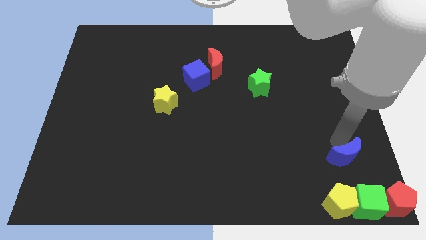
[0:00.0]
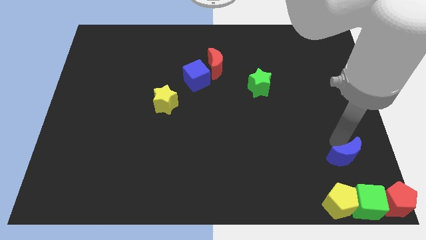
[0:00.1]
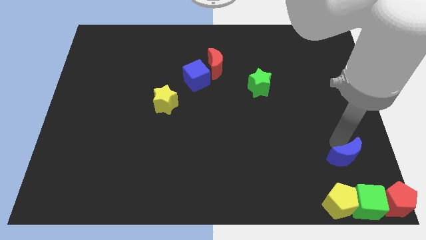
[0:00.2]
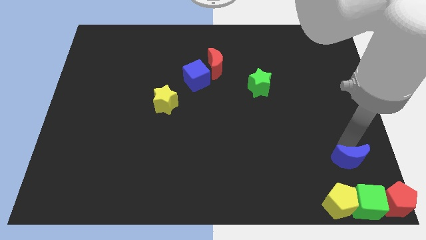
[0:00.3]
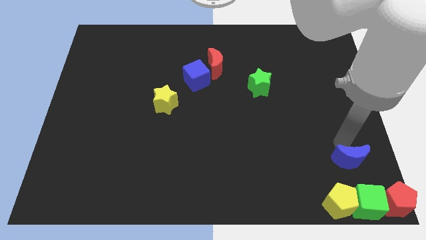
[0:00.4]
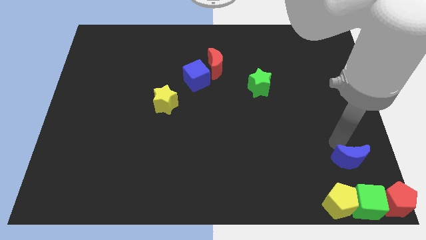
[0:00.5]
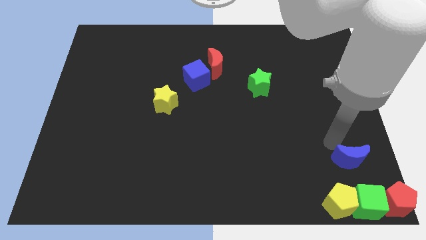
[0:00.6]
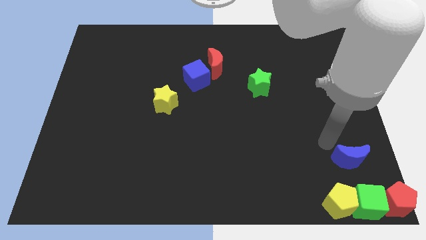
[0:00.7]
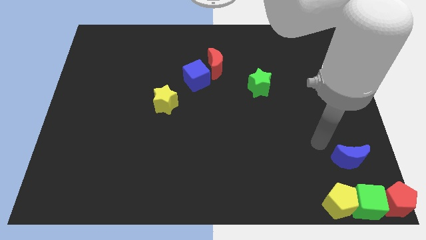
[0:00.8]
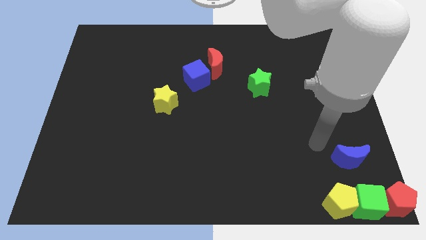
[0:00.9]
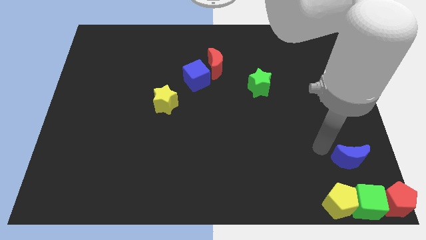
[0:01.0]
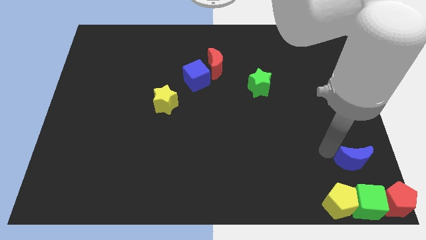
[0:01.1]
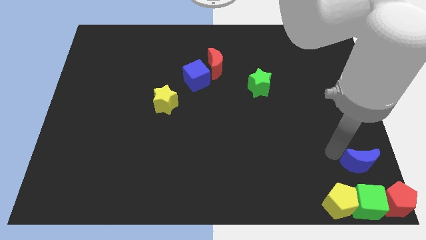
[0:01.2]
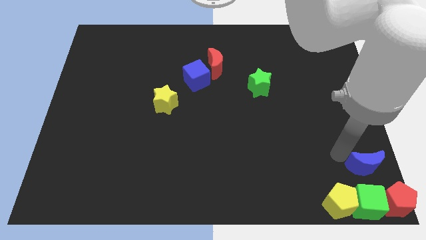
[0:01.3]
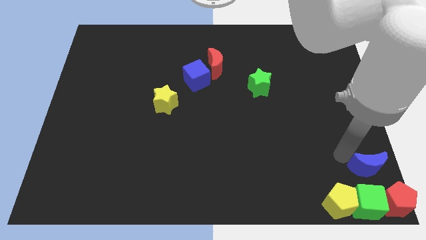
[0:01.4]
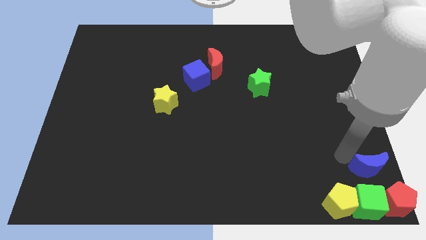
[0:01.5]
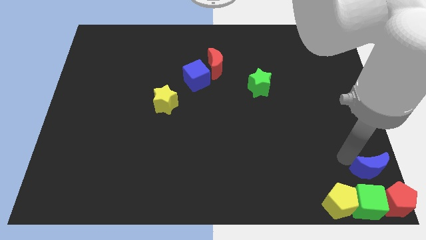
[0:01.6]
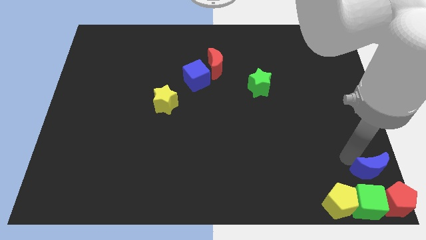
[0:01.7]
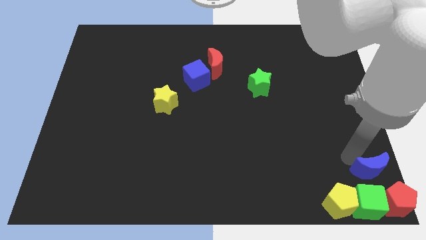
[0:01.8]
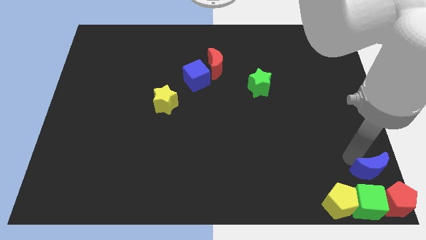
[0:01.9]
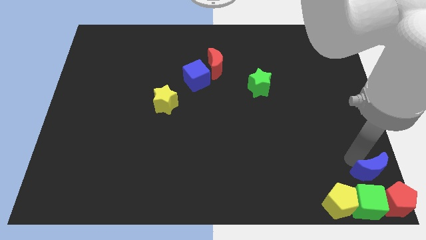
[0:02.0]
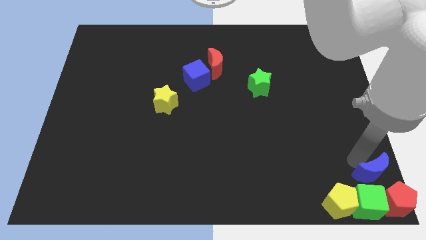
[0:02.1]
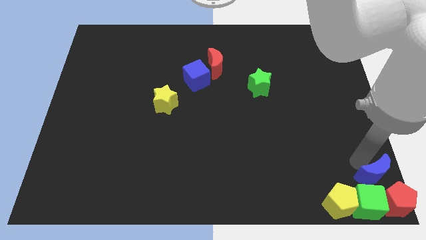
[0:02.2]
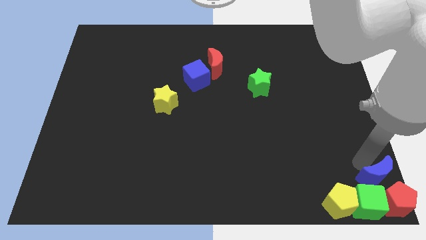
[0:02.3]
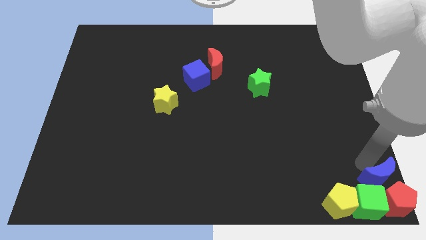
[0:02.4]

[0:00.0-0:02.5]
move the blue crescent into the green cube

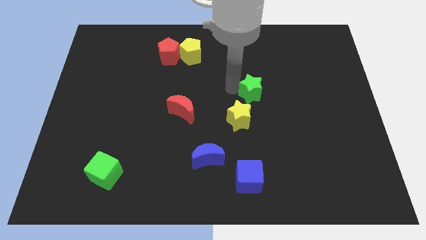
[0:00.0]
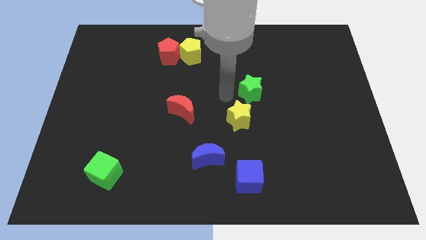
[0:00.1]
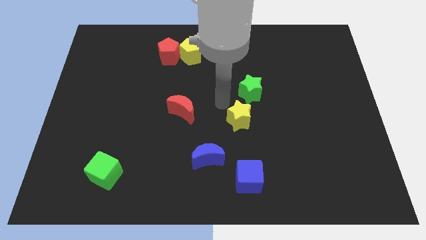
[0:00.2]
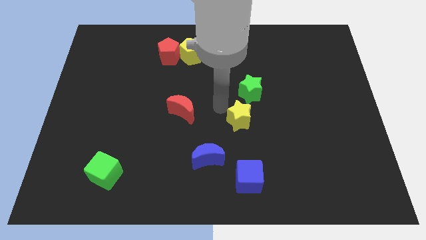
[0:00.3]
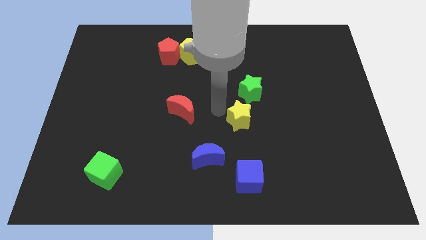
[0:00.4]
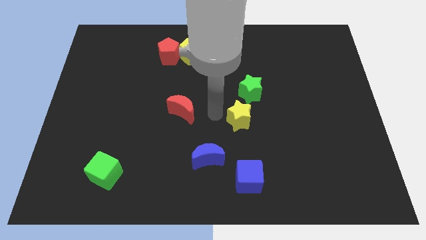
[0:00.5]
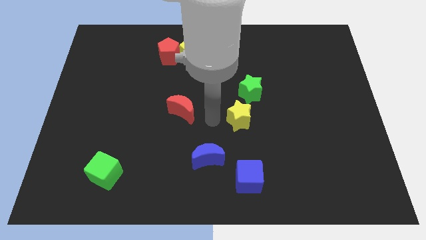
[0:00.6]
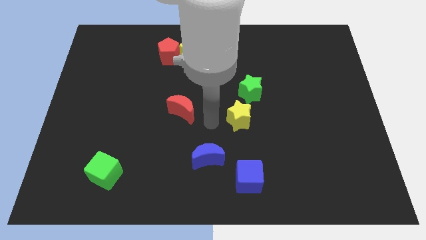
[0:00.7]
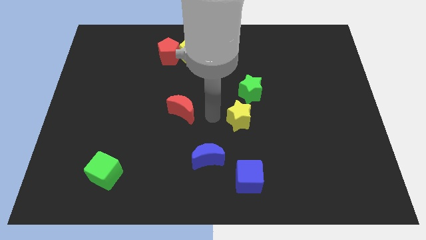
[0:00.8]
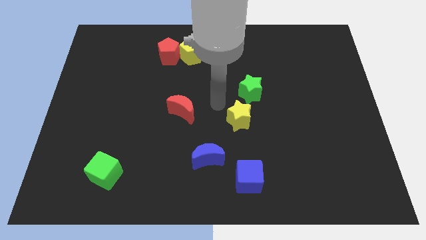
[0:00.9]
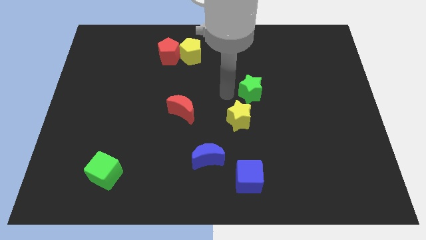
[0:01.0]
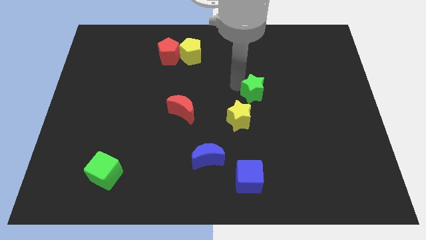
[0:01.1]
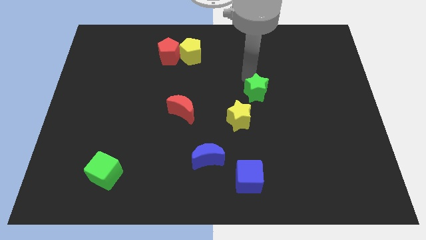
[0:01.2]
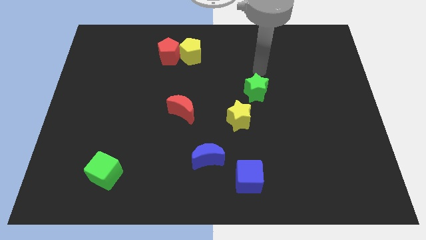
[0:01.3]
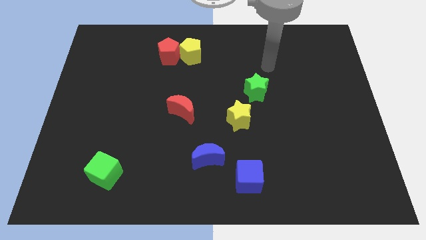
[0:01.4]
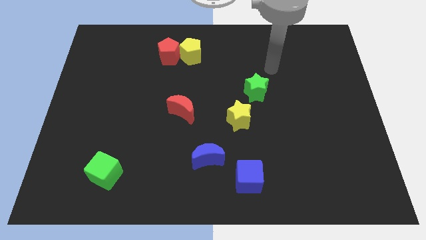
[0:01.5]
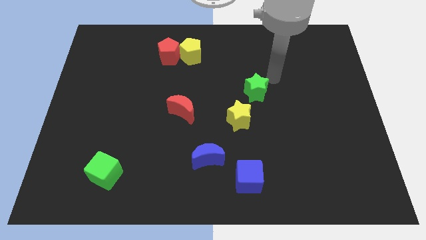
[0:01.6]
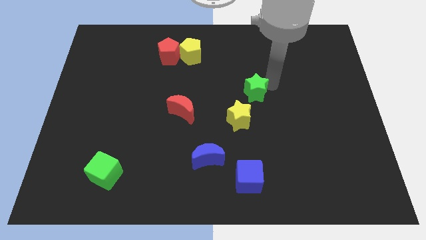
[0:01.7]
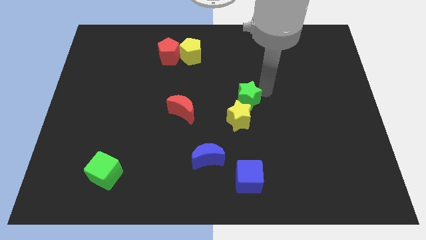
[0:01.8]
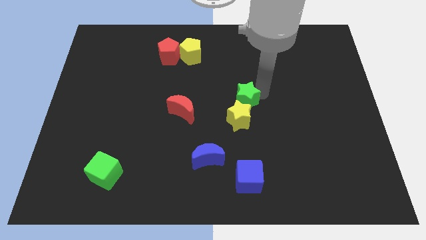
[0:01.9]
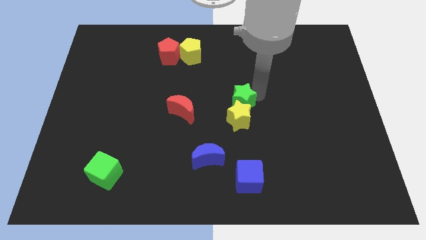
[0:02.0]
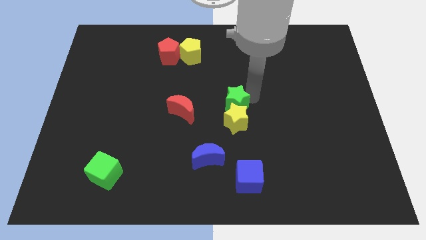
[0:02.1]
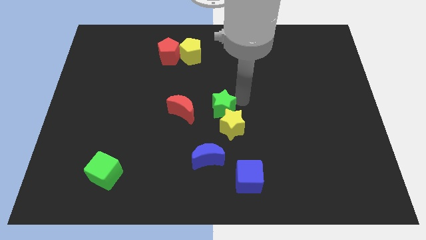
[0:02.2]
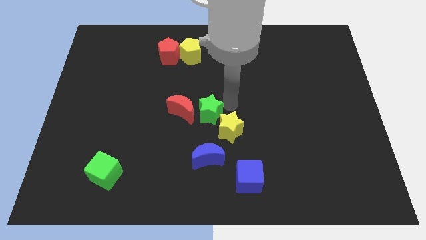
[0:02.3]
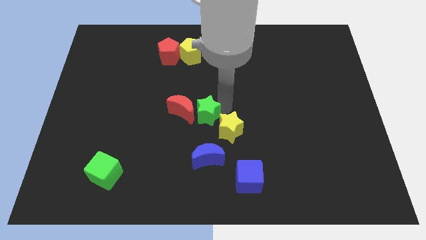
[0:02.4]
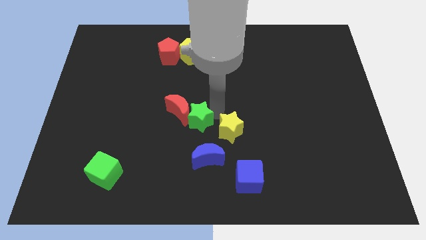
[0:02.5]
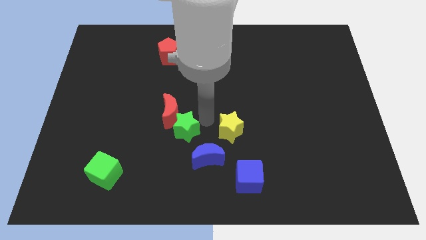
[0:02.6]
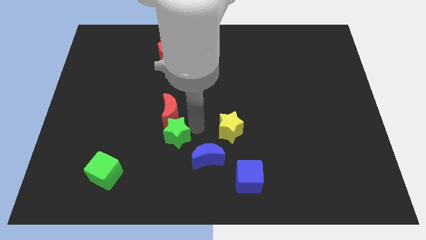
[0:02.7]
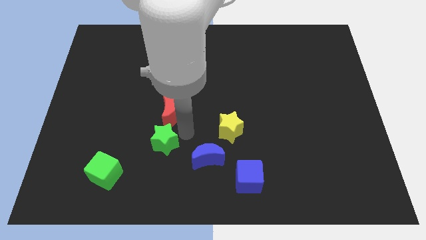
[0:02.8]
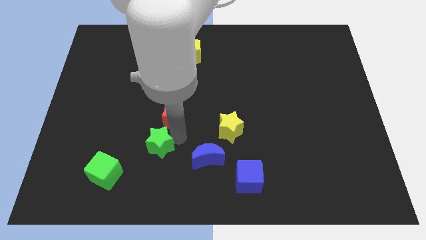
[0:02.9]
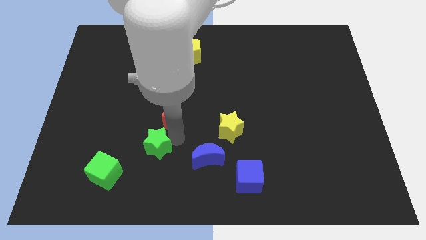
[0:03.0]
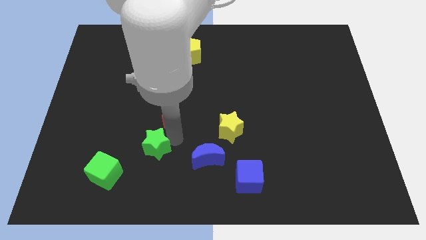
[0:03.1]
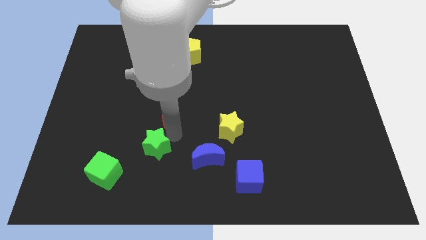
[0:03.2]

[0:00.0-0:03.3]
put the green star at the top right of the green cube

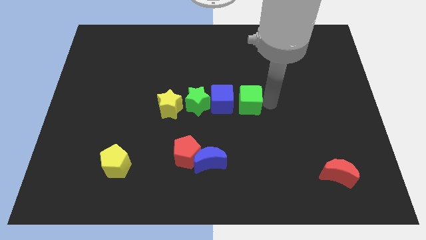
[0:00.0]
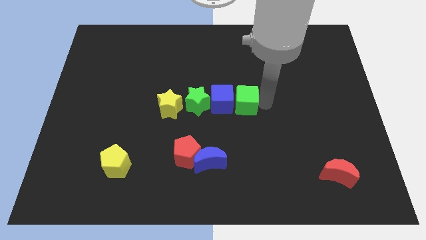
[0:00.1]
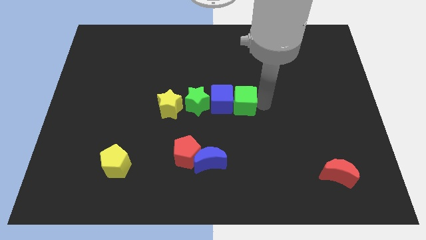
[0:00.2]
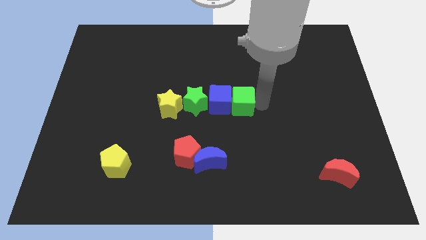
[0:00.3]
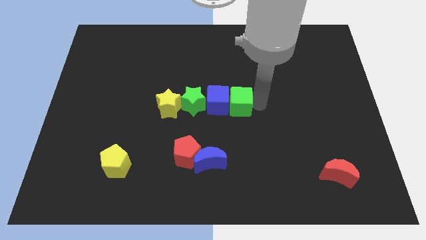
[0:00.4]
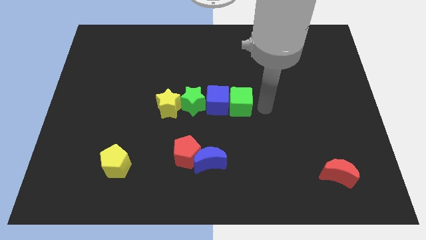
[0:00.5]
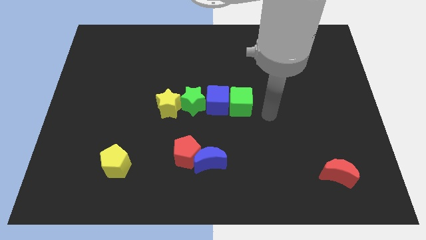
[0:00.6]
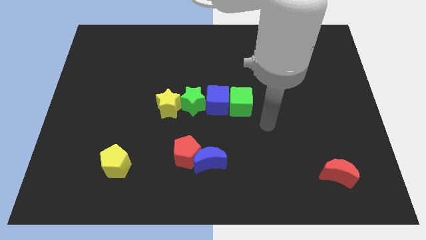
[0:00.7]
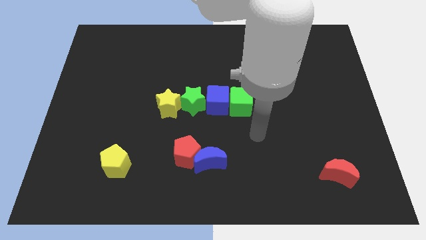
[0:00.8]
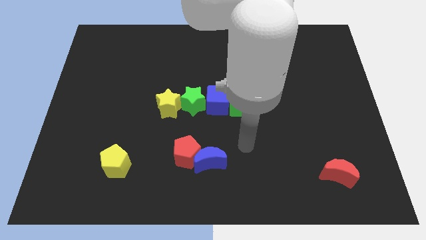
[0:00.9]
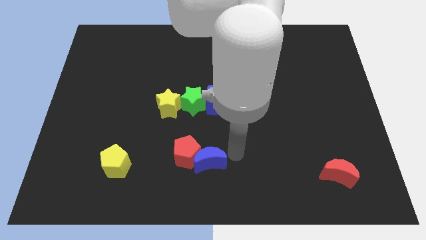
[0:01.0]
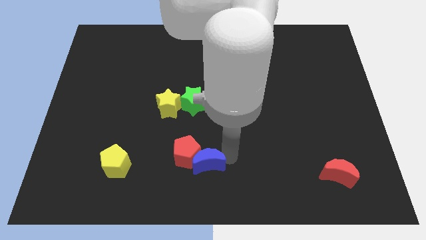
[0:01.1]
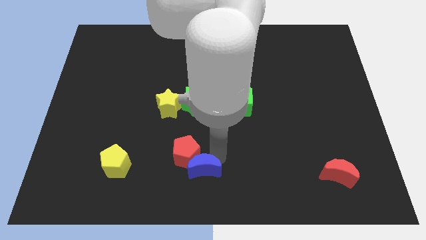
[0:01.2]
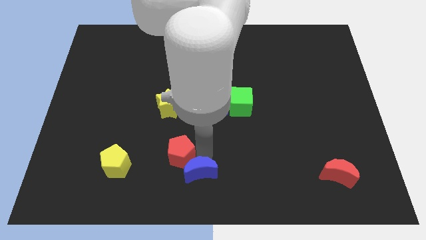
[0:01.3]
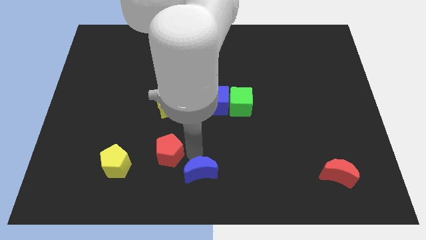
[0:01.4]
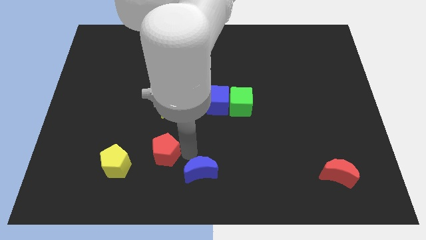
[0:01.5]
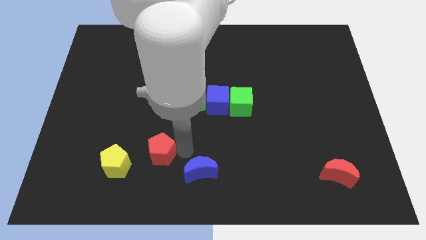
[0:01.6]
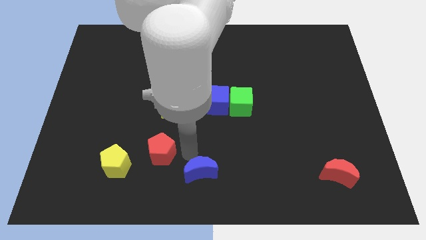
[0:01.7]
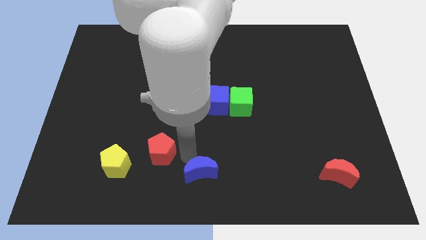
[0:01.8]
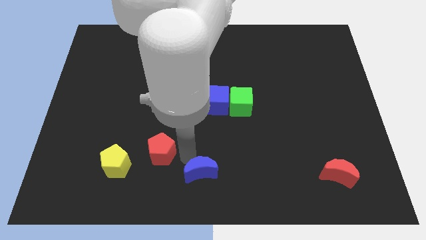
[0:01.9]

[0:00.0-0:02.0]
separate red pentagon from blue moon

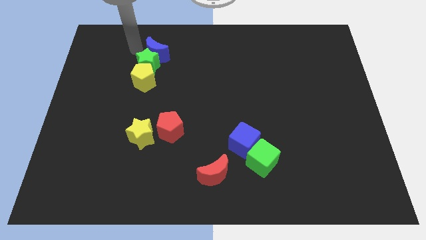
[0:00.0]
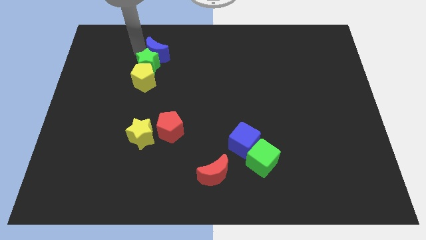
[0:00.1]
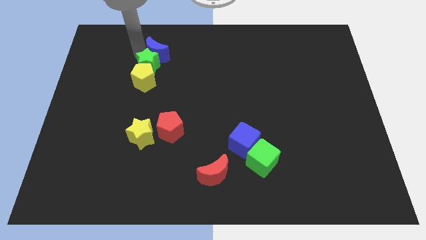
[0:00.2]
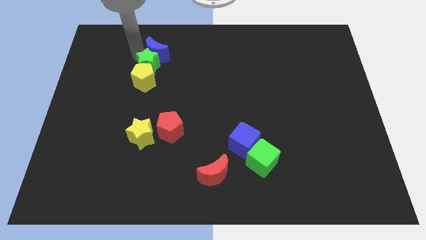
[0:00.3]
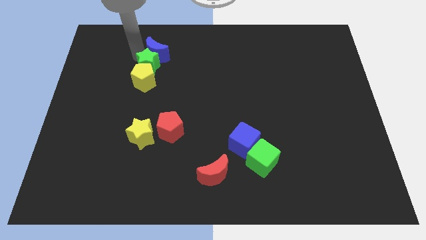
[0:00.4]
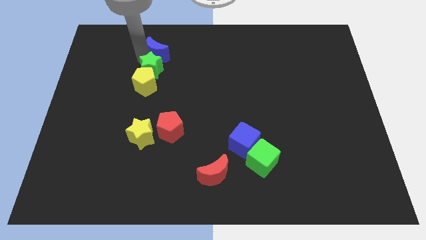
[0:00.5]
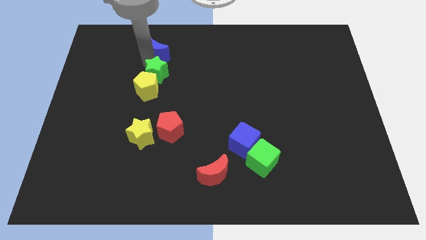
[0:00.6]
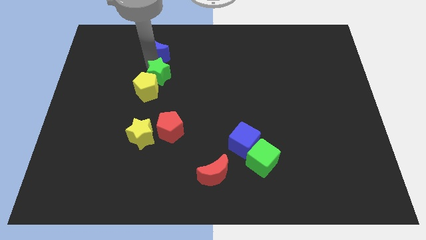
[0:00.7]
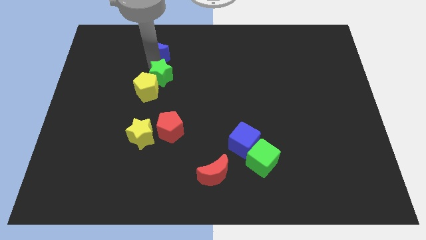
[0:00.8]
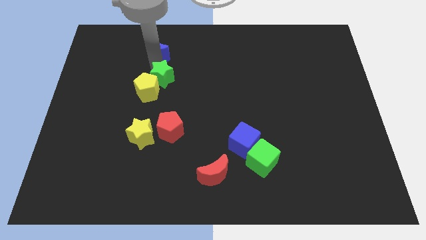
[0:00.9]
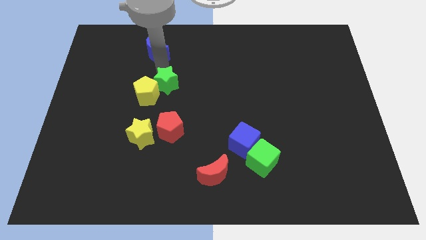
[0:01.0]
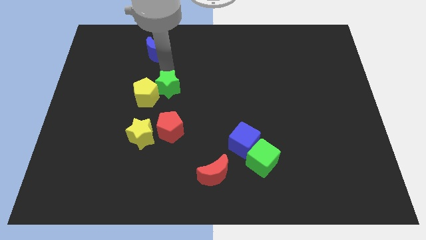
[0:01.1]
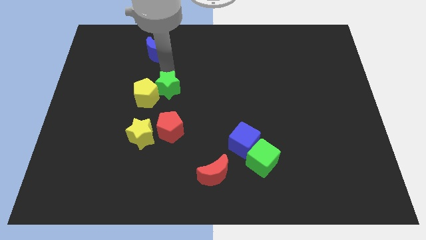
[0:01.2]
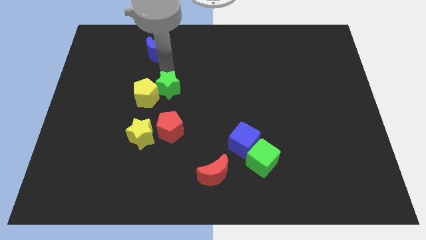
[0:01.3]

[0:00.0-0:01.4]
separate the green star from the blue crescent
